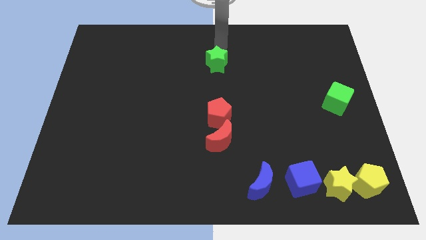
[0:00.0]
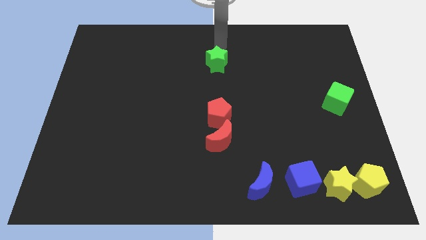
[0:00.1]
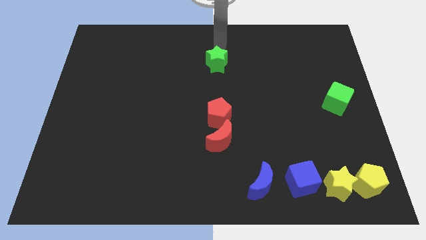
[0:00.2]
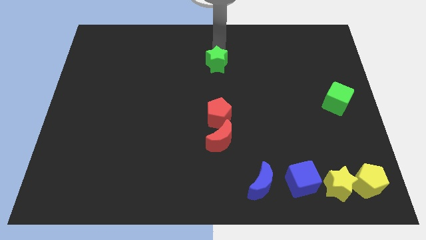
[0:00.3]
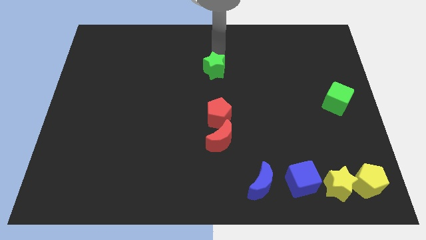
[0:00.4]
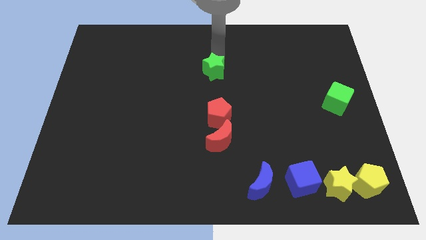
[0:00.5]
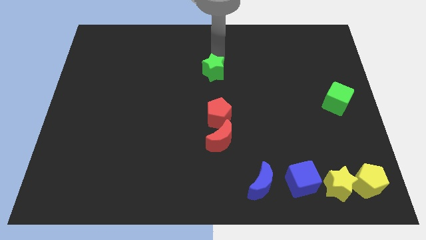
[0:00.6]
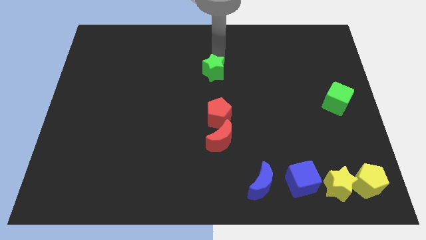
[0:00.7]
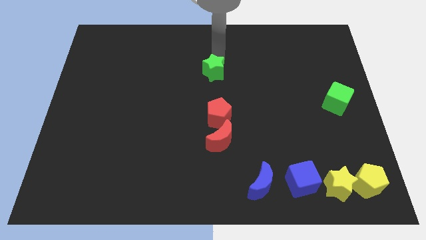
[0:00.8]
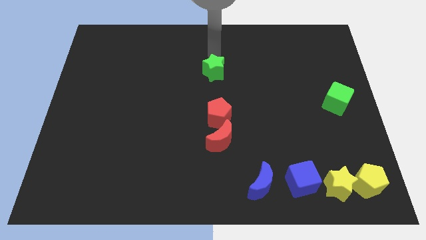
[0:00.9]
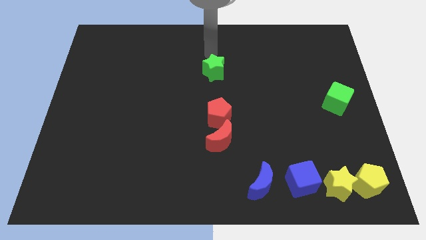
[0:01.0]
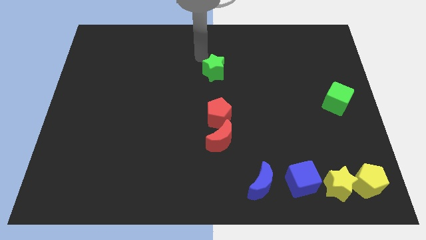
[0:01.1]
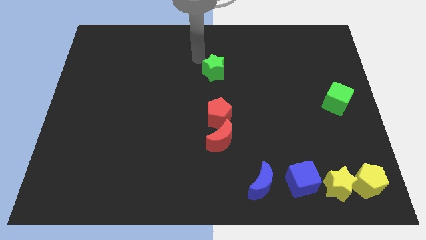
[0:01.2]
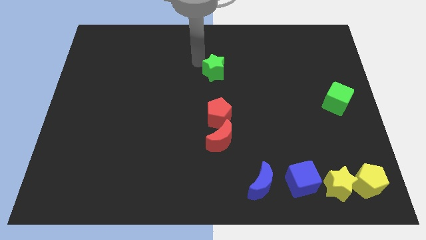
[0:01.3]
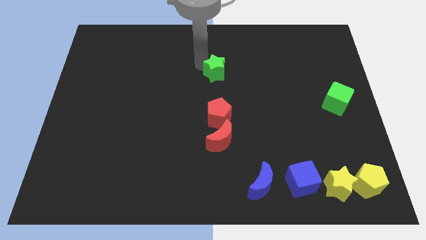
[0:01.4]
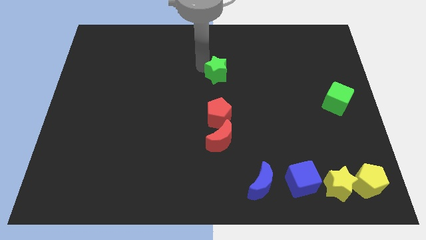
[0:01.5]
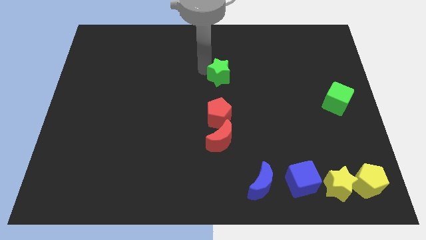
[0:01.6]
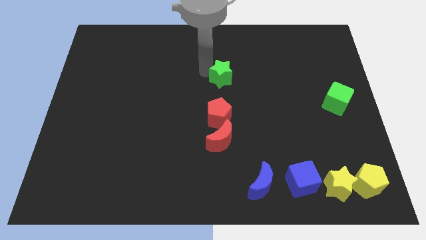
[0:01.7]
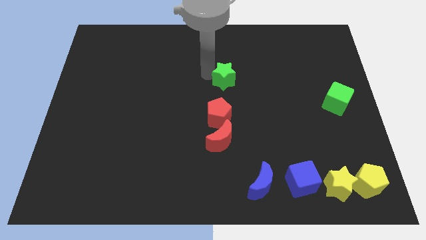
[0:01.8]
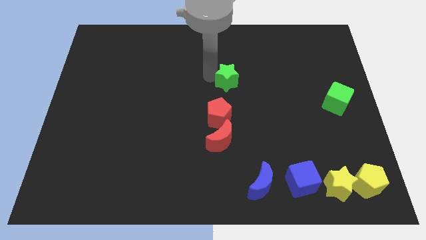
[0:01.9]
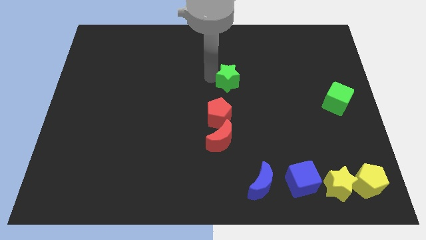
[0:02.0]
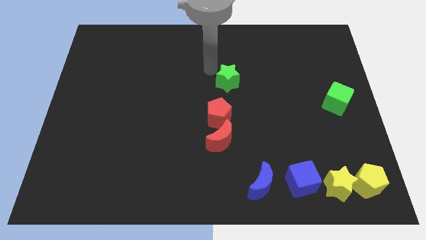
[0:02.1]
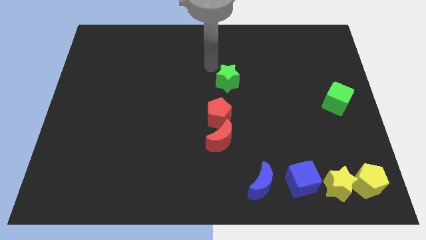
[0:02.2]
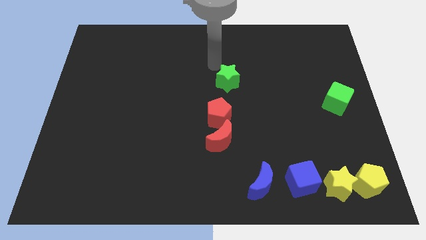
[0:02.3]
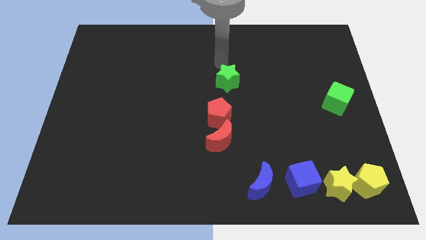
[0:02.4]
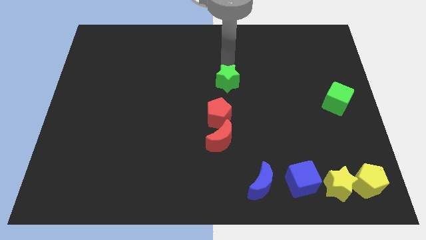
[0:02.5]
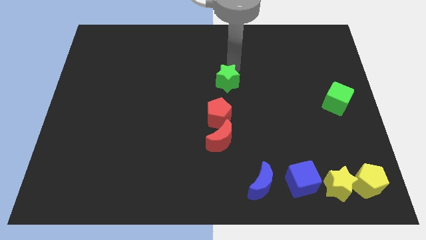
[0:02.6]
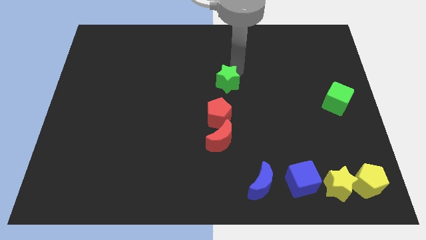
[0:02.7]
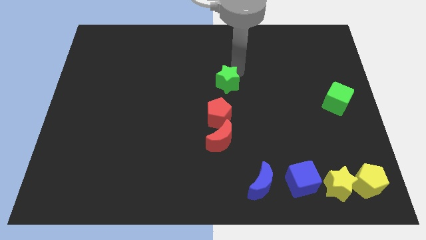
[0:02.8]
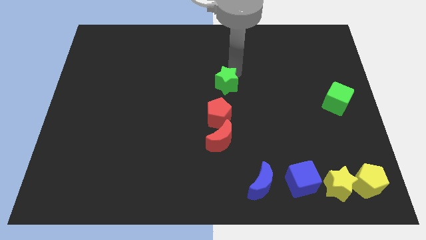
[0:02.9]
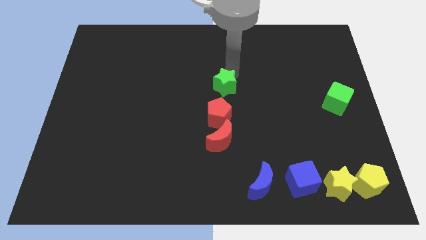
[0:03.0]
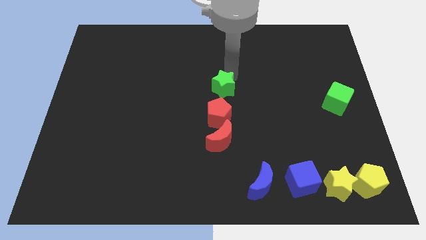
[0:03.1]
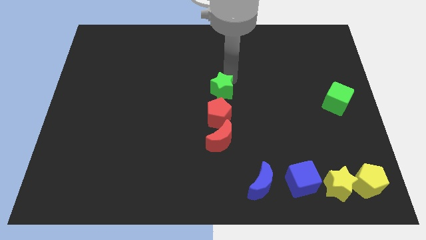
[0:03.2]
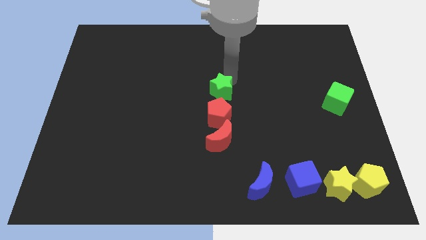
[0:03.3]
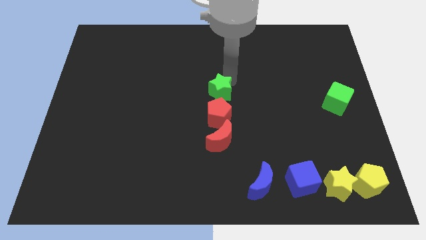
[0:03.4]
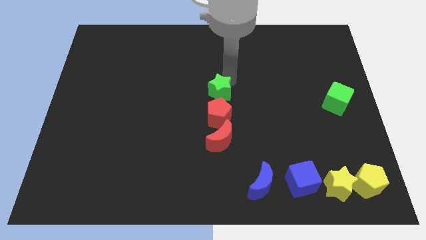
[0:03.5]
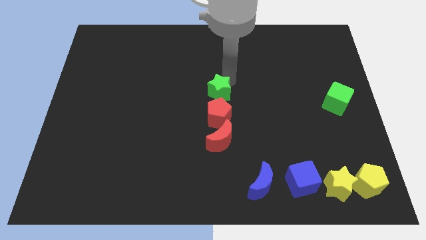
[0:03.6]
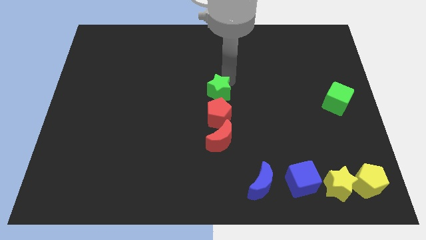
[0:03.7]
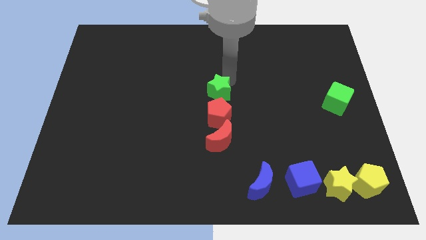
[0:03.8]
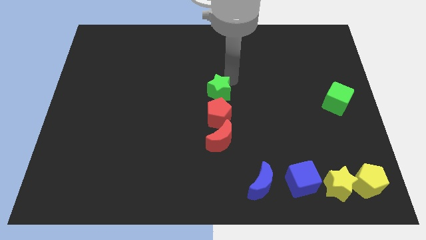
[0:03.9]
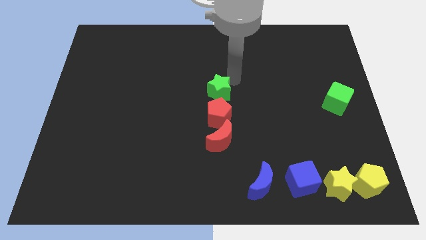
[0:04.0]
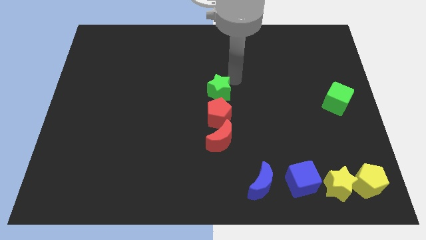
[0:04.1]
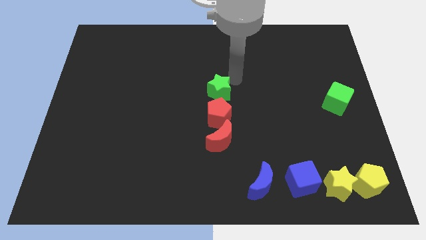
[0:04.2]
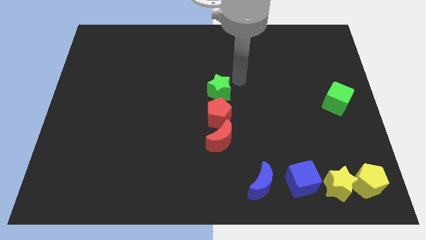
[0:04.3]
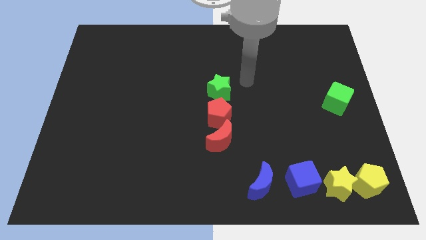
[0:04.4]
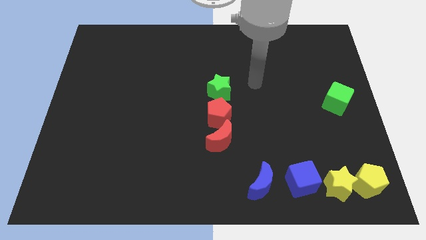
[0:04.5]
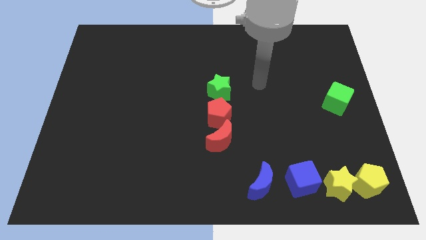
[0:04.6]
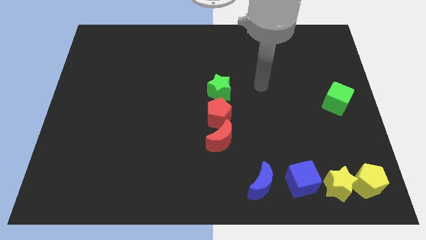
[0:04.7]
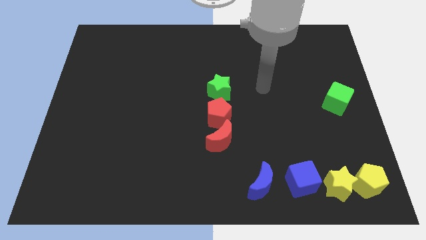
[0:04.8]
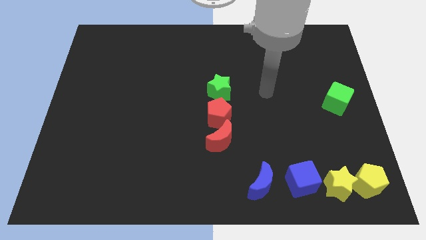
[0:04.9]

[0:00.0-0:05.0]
move the green star close to the red pentagon

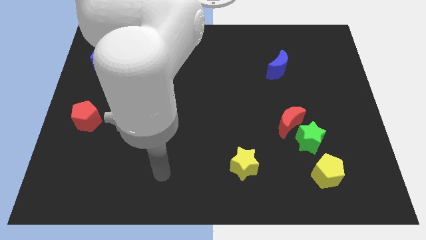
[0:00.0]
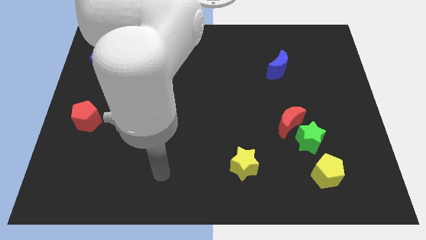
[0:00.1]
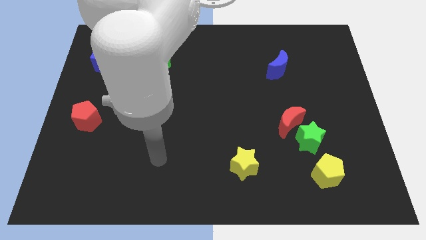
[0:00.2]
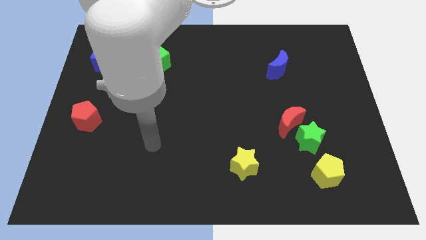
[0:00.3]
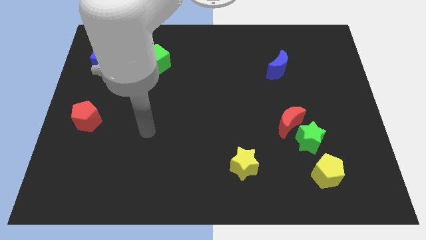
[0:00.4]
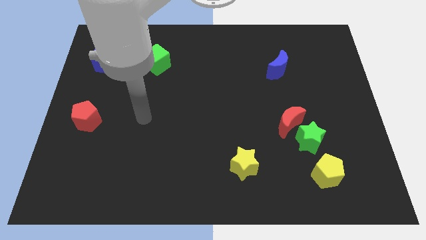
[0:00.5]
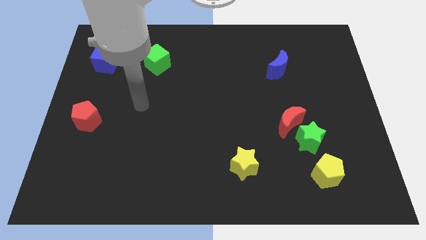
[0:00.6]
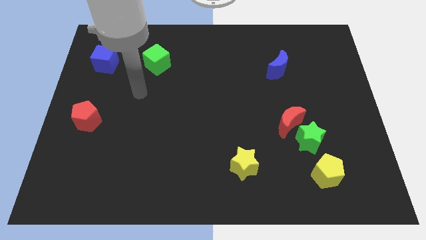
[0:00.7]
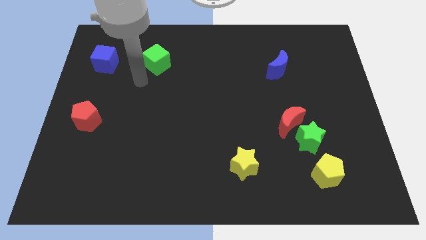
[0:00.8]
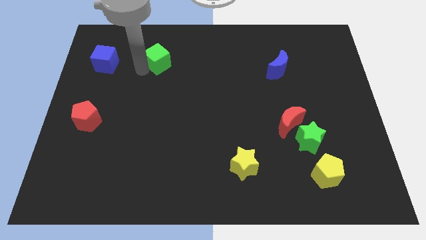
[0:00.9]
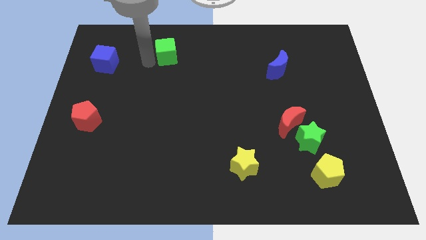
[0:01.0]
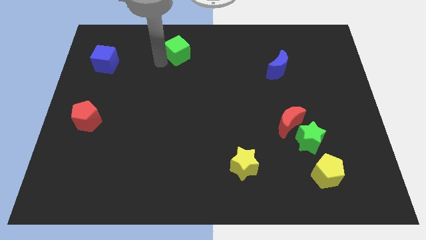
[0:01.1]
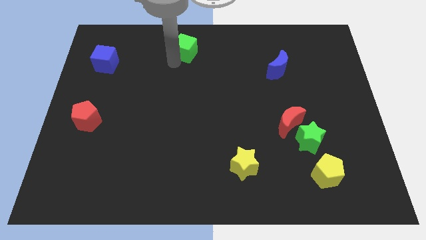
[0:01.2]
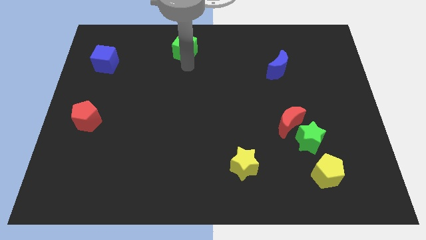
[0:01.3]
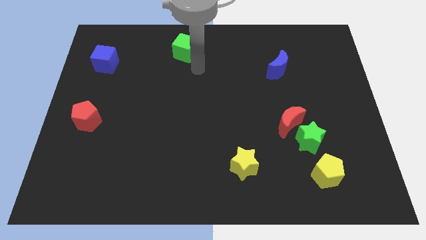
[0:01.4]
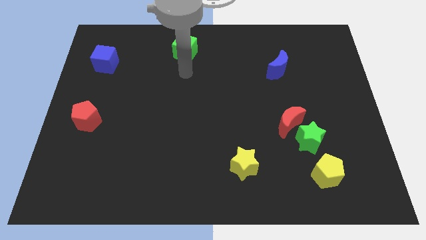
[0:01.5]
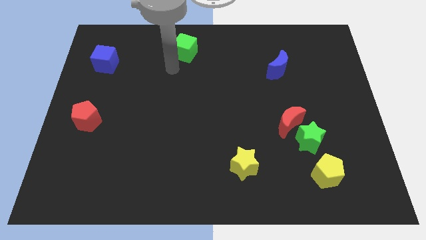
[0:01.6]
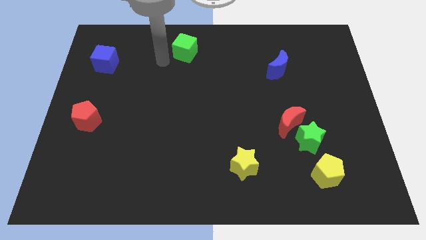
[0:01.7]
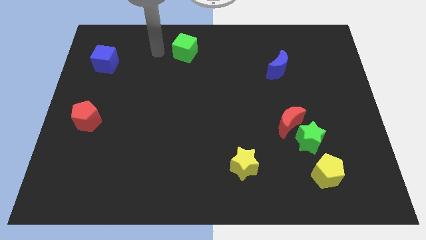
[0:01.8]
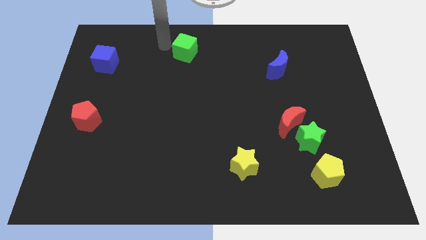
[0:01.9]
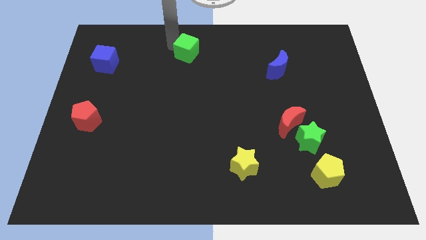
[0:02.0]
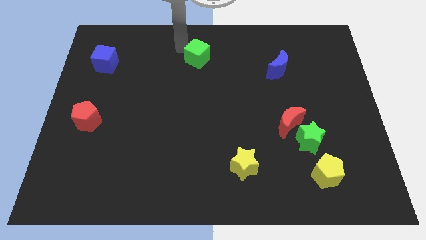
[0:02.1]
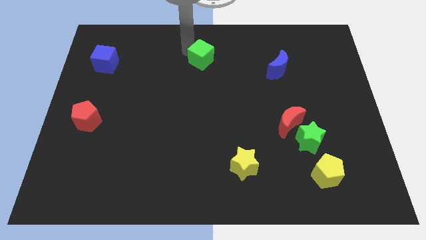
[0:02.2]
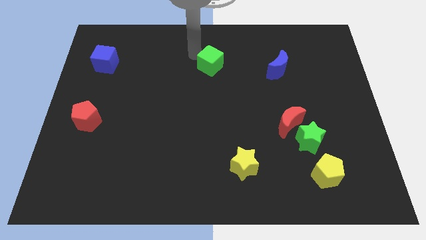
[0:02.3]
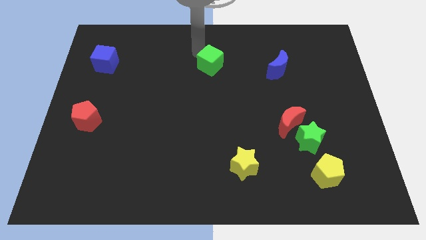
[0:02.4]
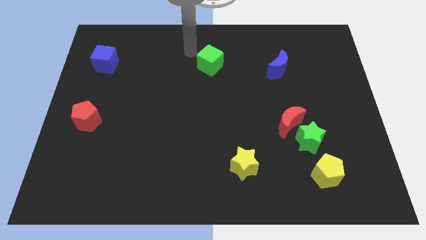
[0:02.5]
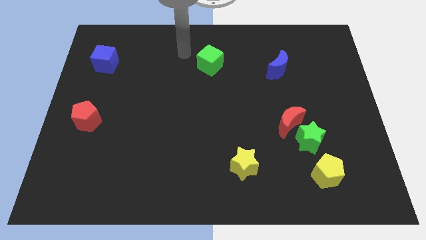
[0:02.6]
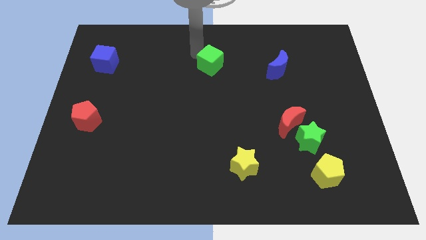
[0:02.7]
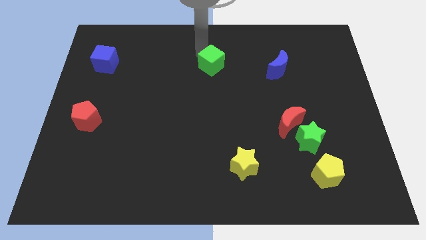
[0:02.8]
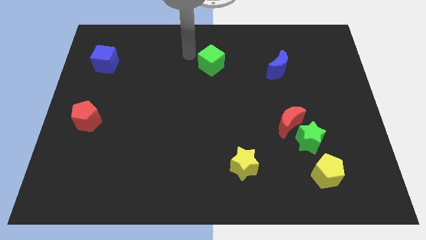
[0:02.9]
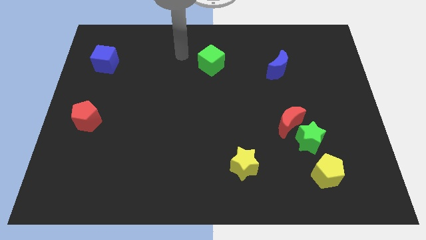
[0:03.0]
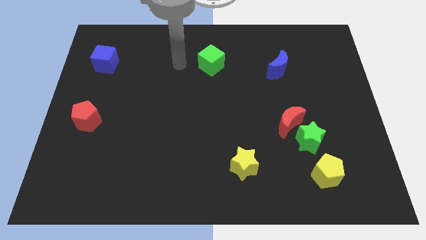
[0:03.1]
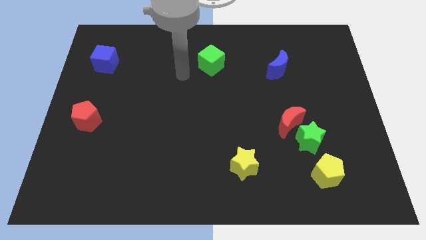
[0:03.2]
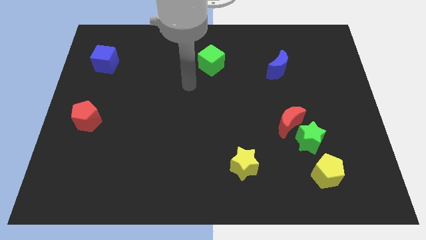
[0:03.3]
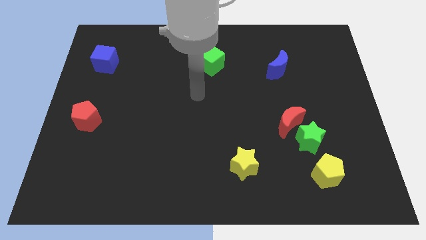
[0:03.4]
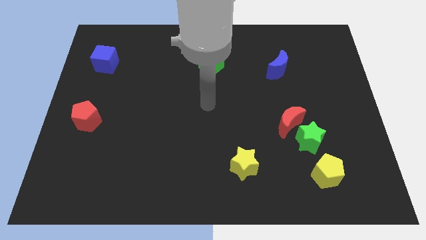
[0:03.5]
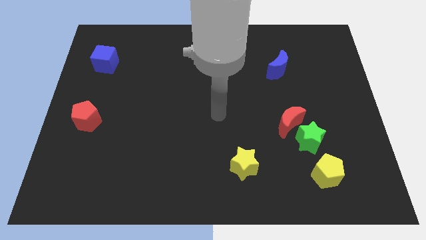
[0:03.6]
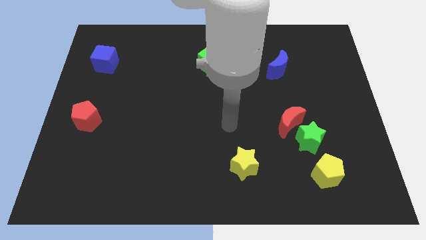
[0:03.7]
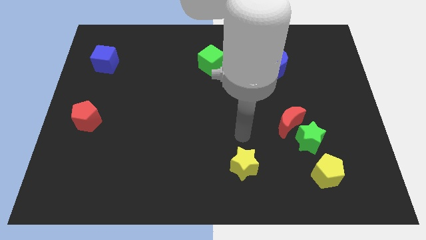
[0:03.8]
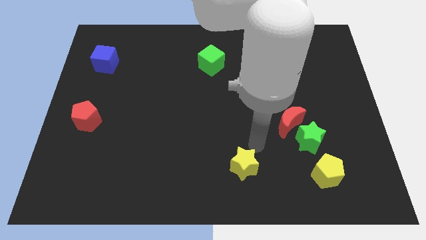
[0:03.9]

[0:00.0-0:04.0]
place the green cube to the left of the blue moon
